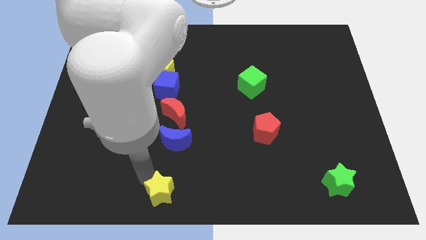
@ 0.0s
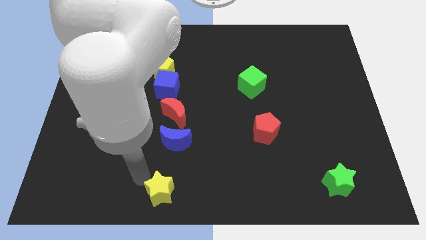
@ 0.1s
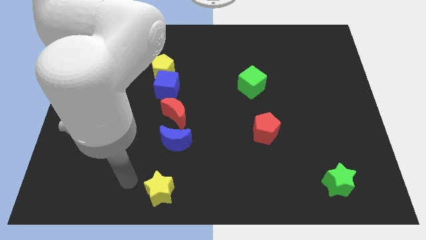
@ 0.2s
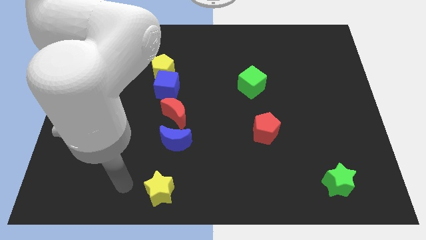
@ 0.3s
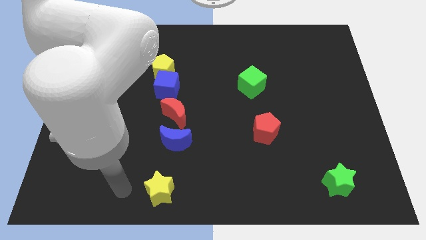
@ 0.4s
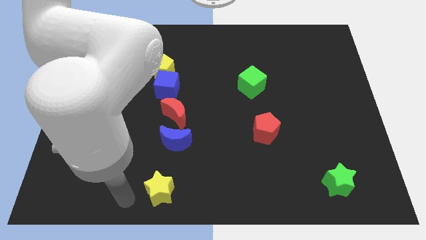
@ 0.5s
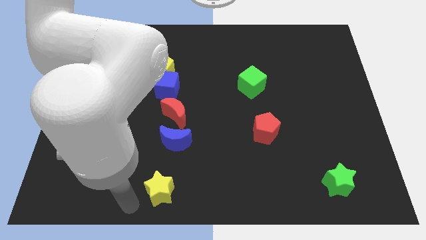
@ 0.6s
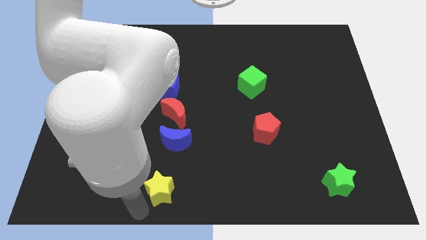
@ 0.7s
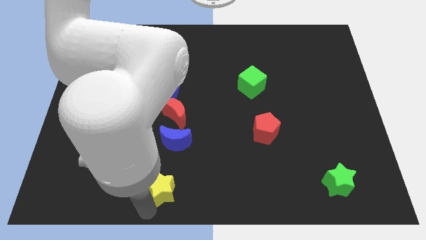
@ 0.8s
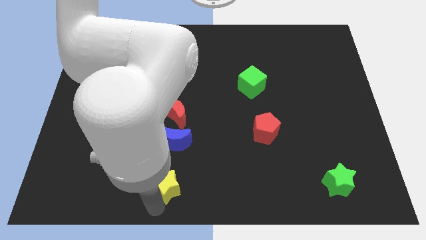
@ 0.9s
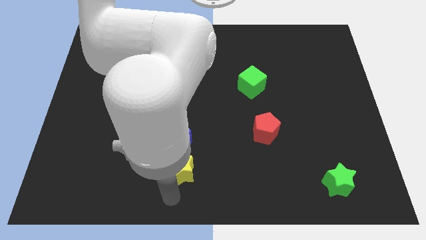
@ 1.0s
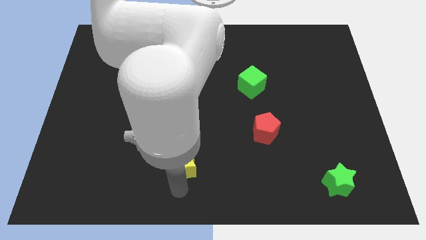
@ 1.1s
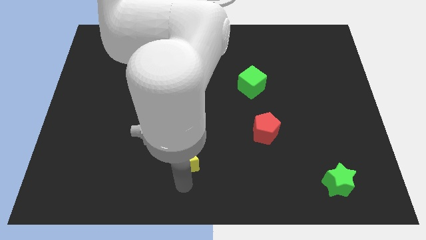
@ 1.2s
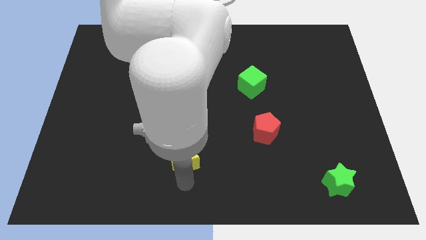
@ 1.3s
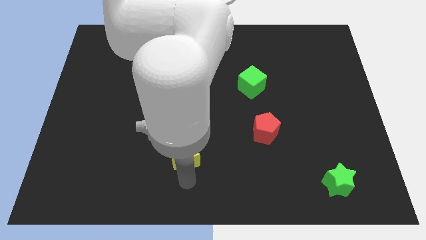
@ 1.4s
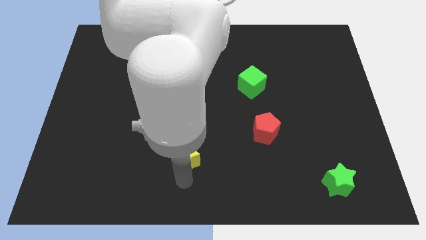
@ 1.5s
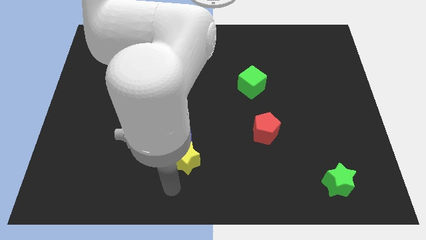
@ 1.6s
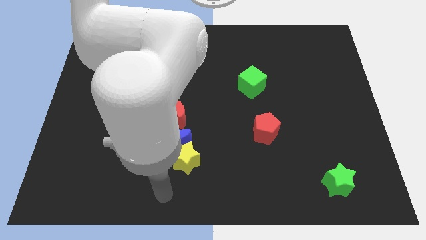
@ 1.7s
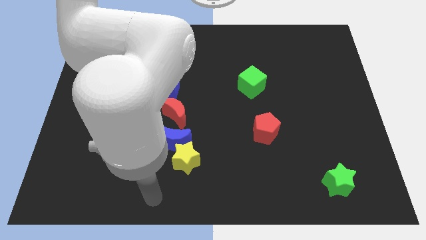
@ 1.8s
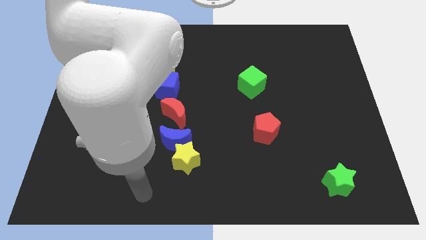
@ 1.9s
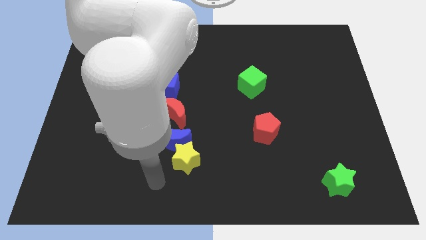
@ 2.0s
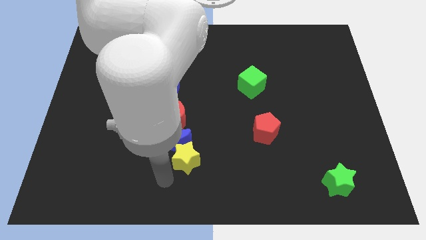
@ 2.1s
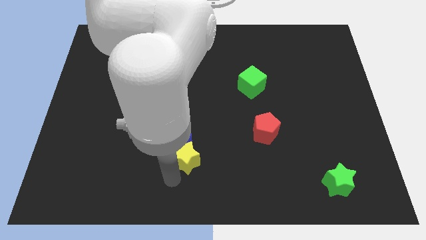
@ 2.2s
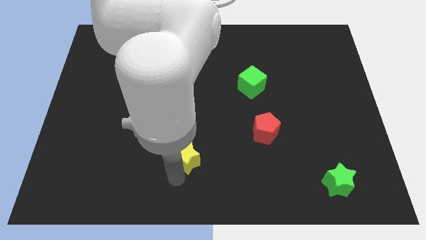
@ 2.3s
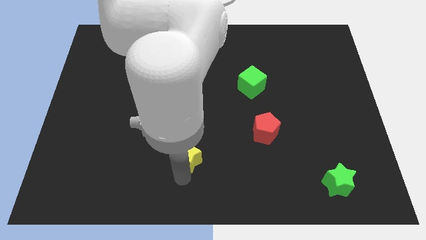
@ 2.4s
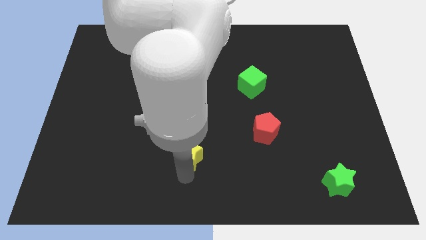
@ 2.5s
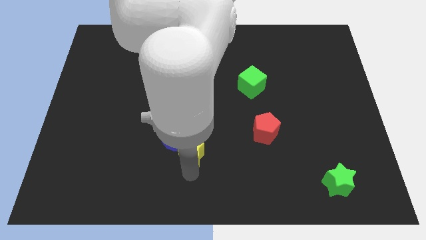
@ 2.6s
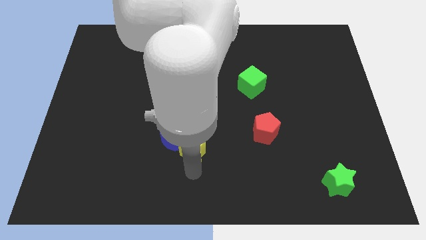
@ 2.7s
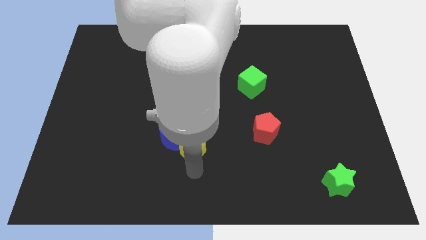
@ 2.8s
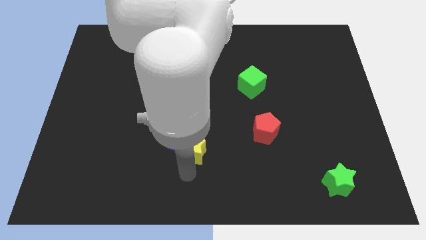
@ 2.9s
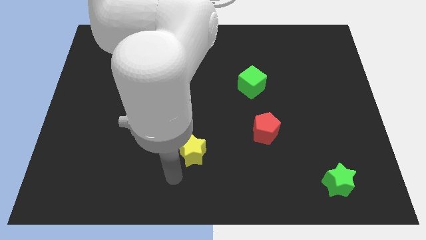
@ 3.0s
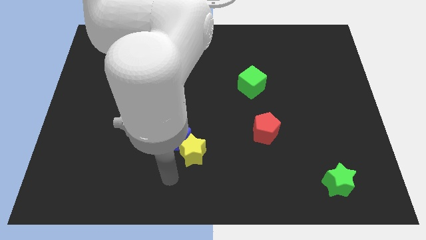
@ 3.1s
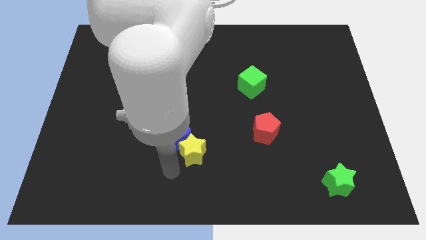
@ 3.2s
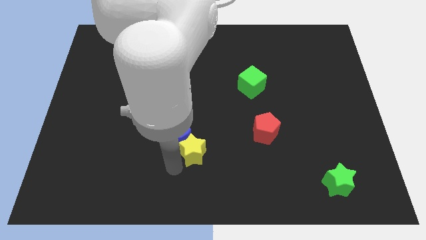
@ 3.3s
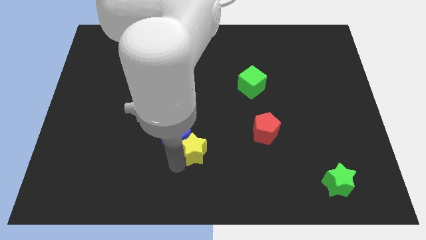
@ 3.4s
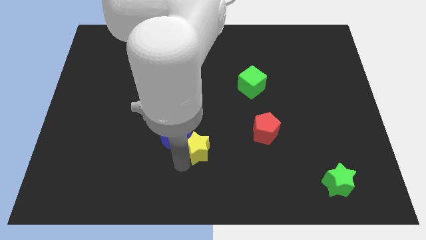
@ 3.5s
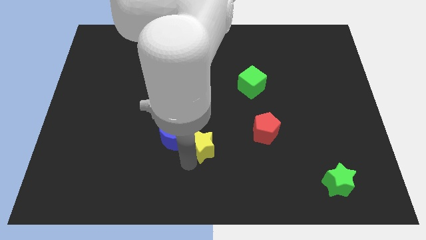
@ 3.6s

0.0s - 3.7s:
push the yellow star into the blue semicircle

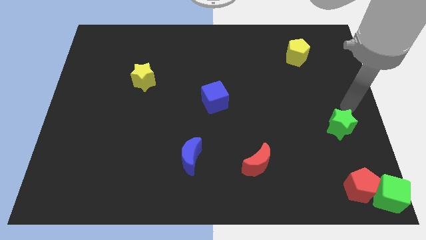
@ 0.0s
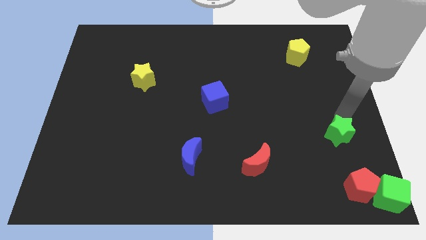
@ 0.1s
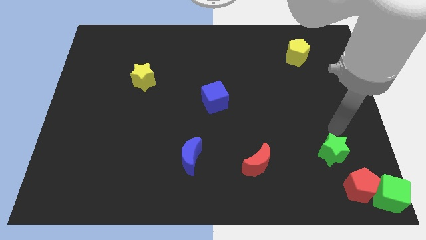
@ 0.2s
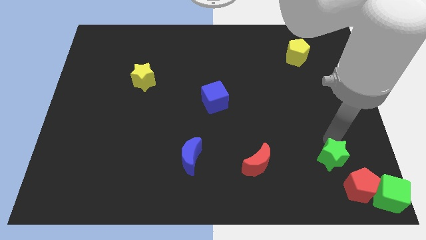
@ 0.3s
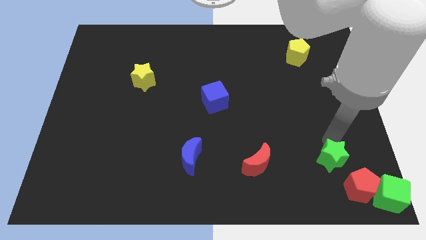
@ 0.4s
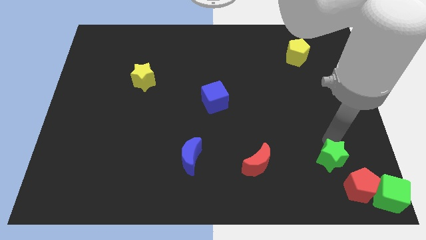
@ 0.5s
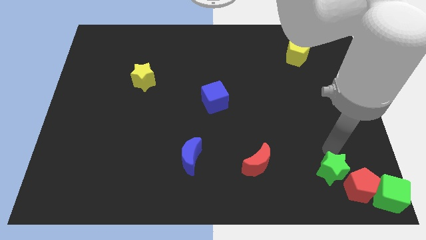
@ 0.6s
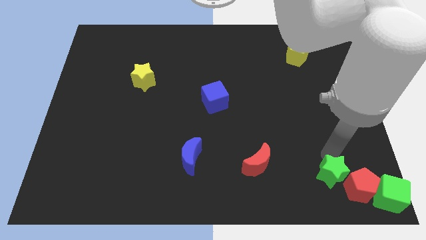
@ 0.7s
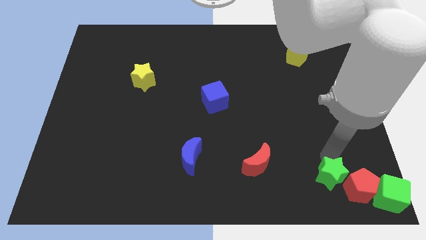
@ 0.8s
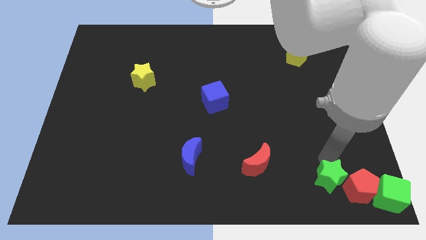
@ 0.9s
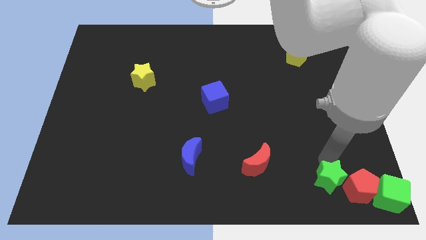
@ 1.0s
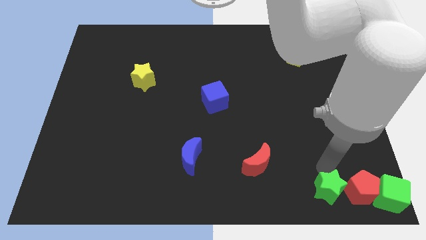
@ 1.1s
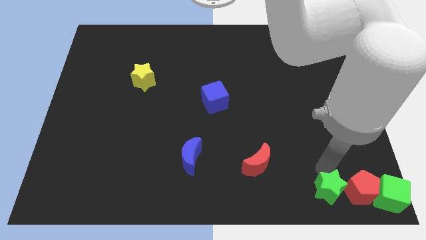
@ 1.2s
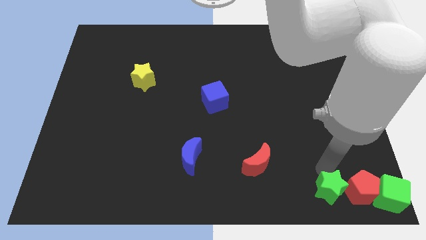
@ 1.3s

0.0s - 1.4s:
place green star beside left to the red pentagon

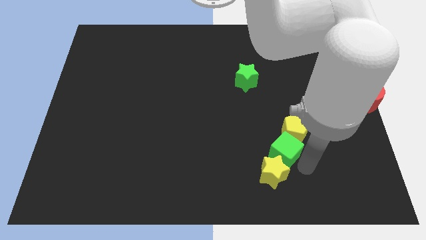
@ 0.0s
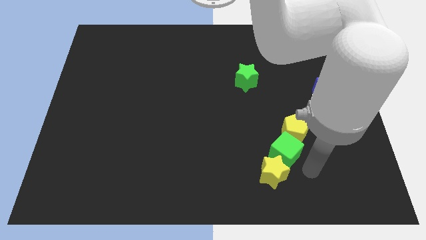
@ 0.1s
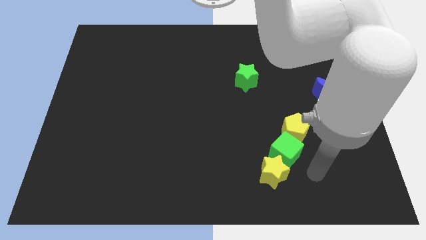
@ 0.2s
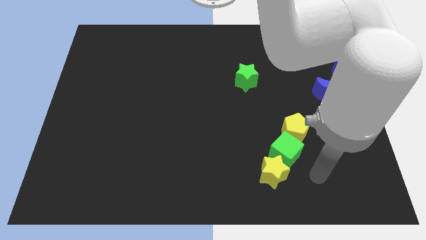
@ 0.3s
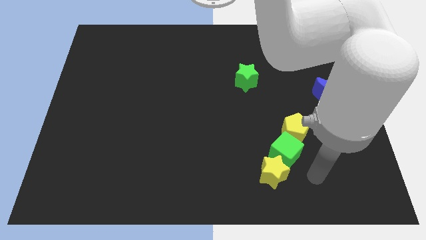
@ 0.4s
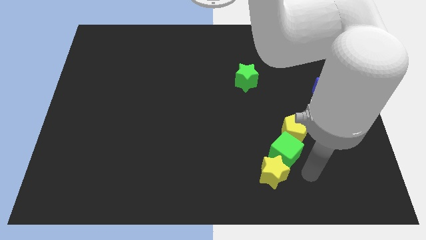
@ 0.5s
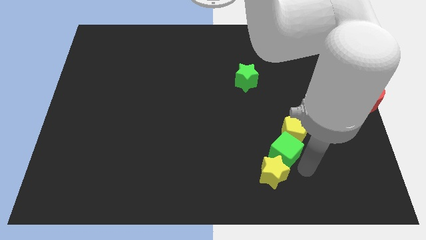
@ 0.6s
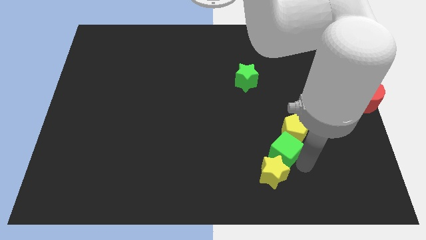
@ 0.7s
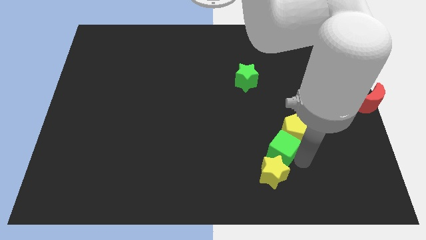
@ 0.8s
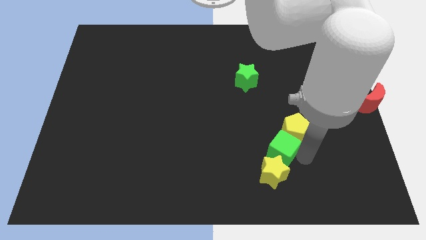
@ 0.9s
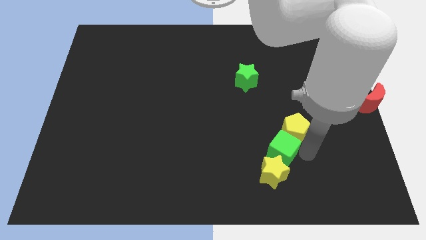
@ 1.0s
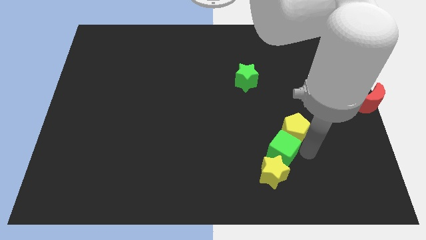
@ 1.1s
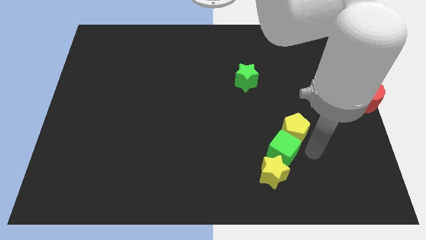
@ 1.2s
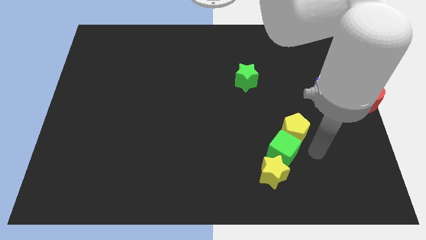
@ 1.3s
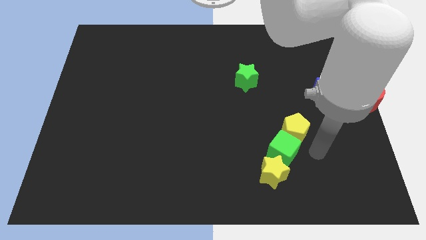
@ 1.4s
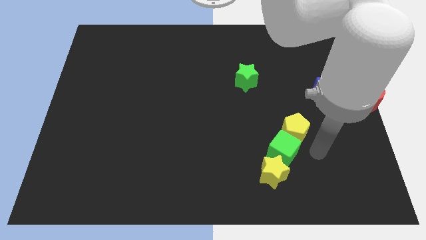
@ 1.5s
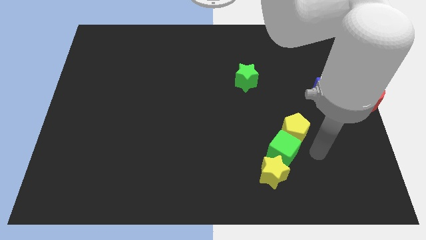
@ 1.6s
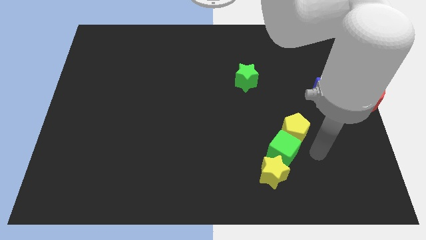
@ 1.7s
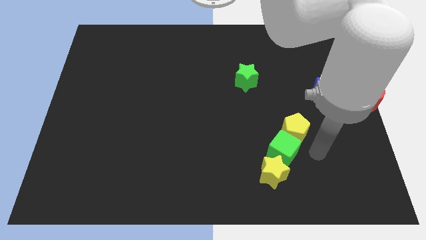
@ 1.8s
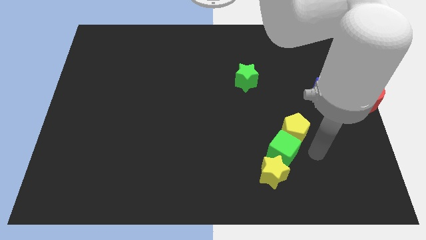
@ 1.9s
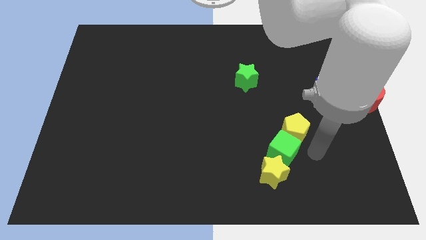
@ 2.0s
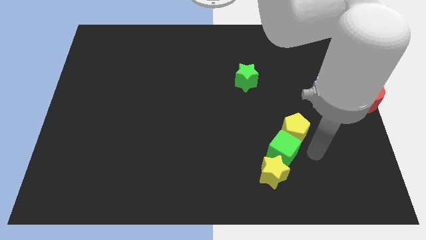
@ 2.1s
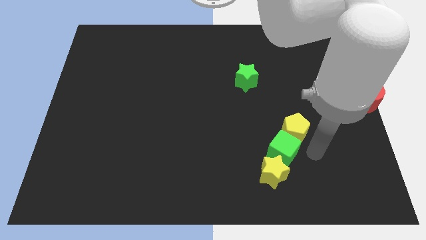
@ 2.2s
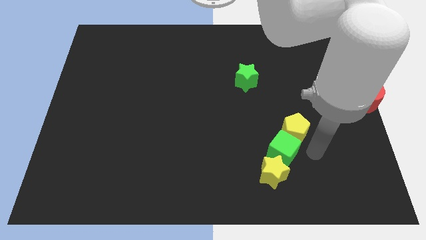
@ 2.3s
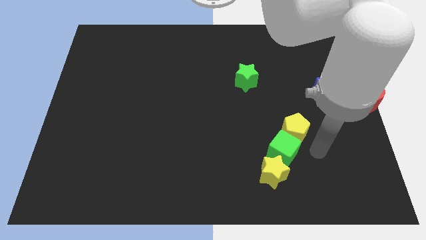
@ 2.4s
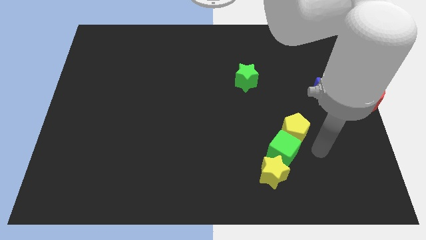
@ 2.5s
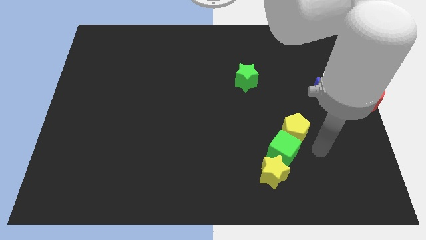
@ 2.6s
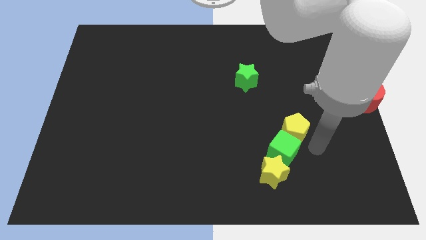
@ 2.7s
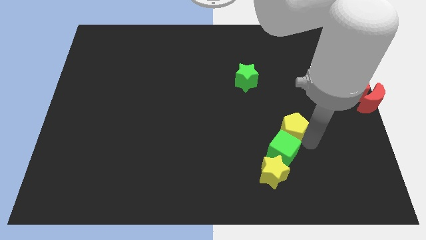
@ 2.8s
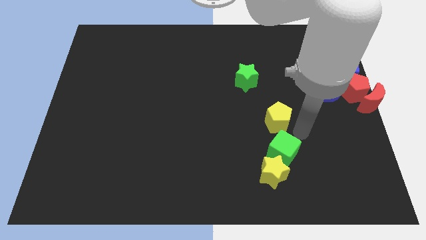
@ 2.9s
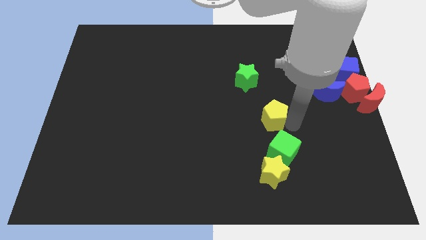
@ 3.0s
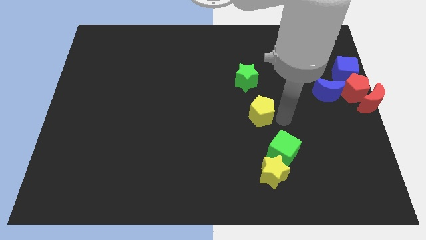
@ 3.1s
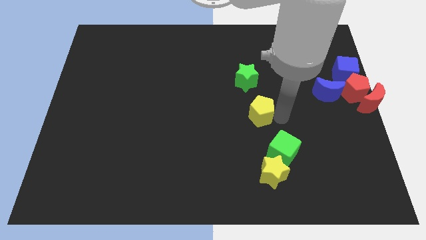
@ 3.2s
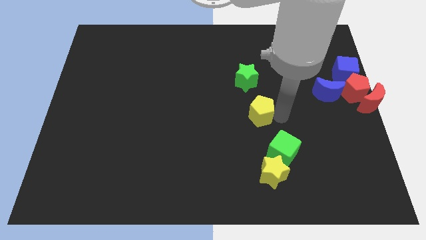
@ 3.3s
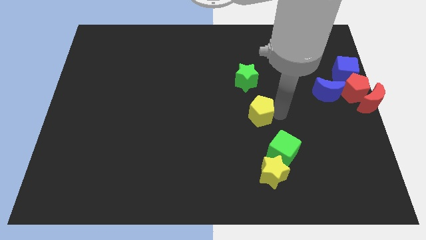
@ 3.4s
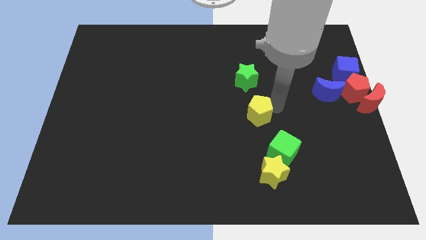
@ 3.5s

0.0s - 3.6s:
separate yellow pentagon from green cube

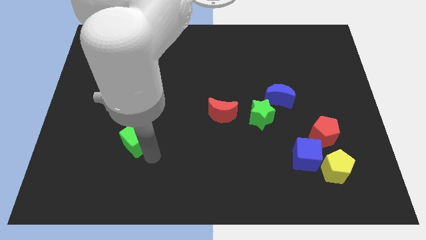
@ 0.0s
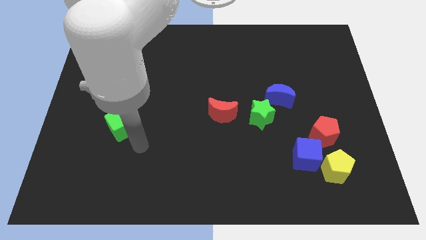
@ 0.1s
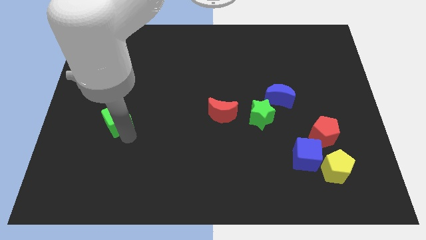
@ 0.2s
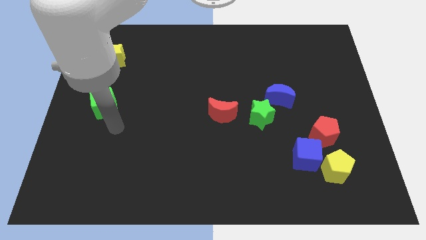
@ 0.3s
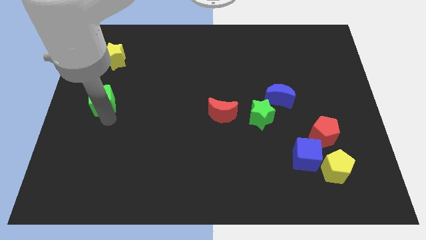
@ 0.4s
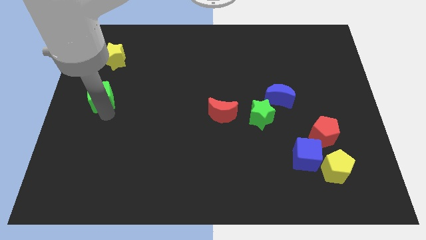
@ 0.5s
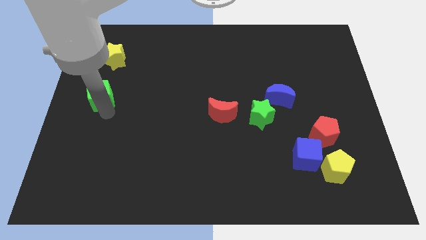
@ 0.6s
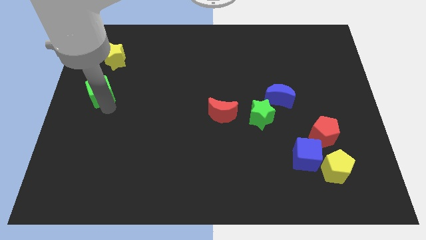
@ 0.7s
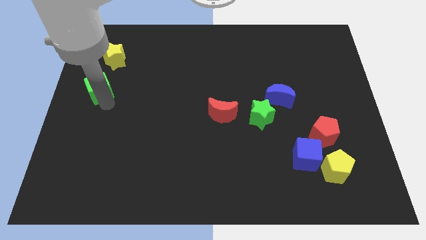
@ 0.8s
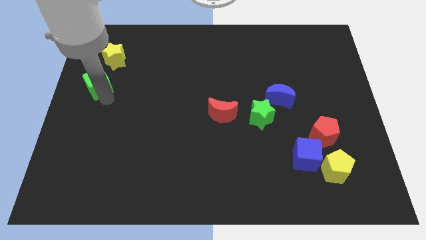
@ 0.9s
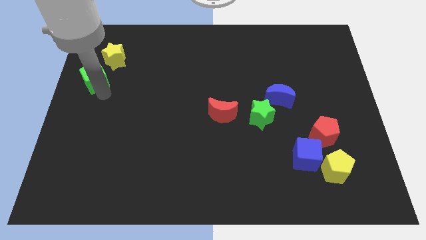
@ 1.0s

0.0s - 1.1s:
slide green cube towards yellow star
